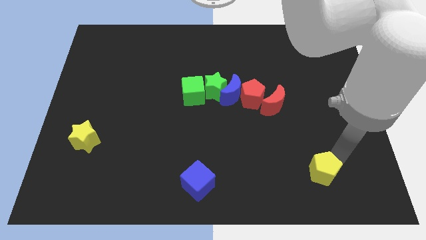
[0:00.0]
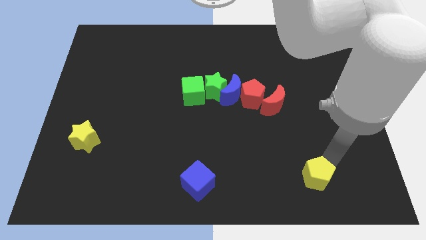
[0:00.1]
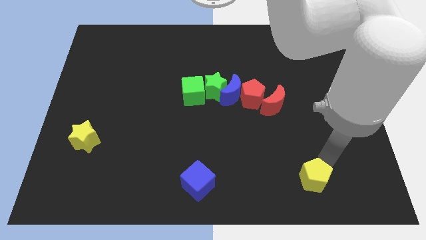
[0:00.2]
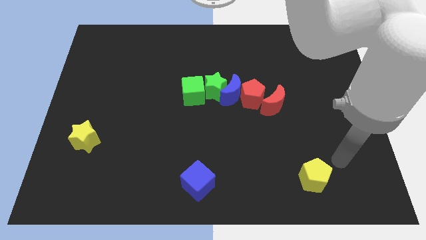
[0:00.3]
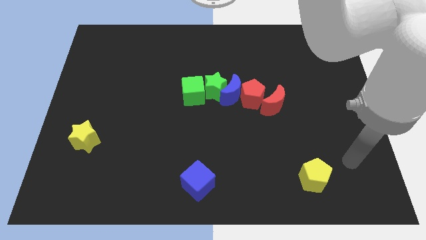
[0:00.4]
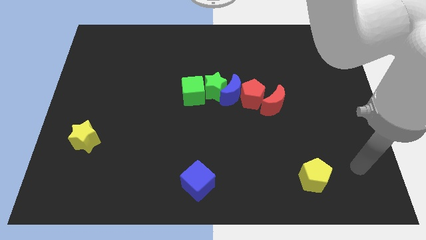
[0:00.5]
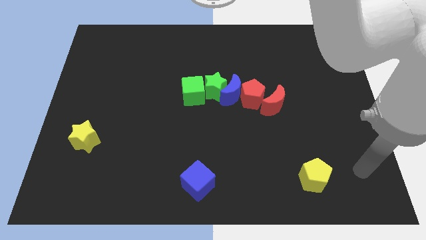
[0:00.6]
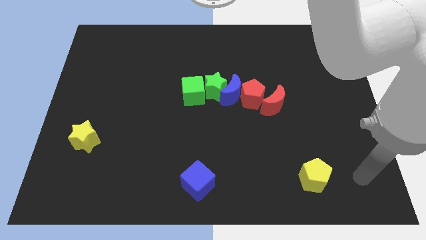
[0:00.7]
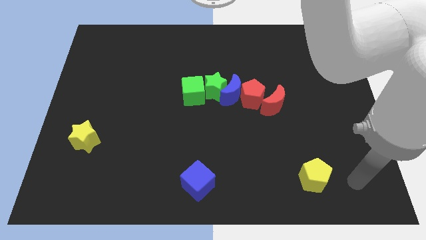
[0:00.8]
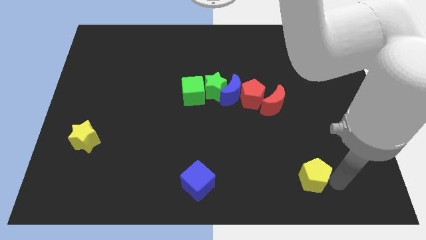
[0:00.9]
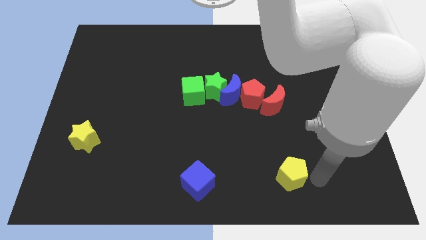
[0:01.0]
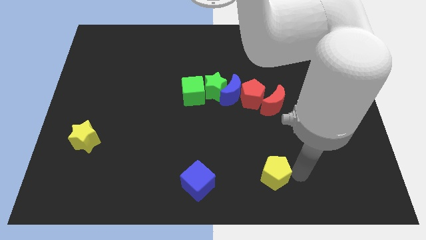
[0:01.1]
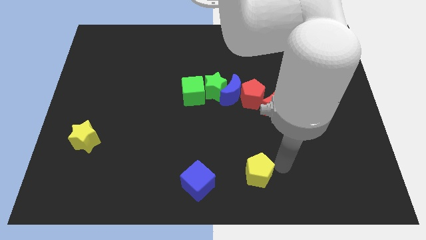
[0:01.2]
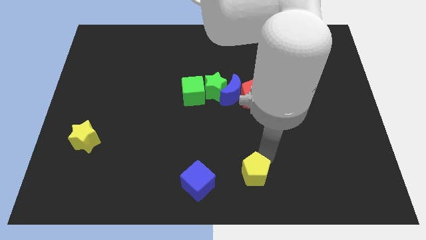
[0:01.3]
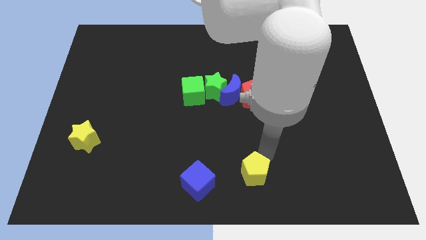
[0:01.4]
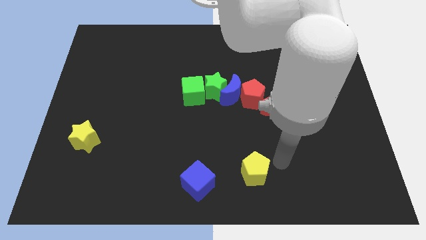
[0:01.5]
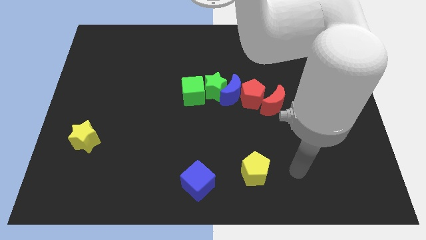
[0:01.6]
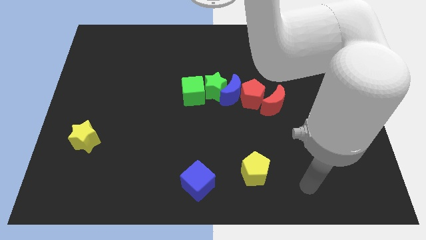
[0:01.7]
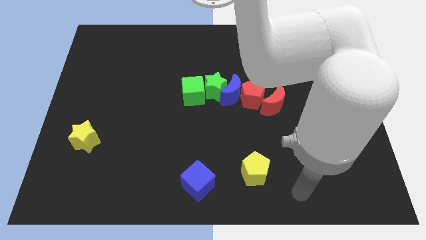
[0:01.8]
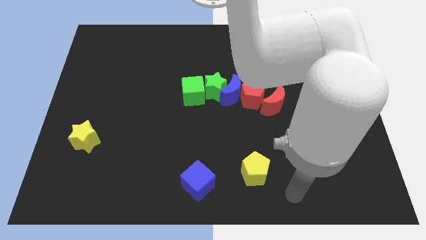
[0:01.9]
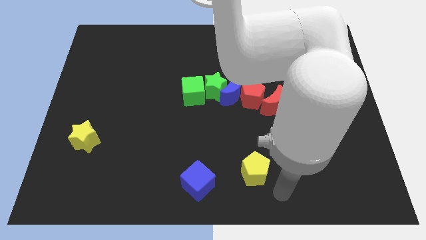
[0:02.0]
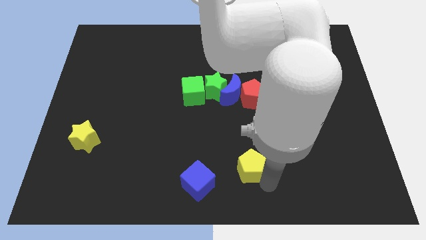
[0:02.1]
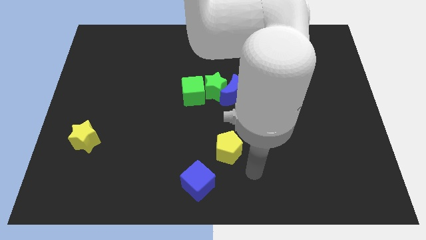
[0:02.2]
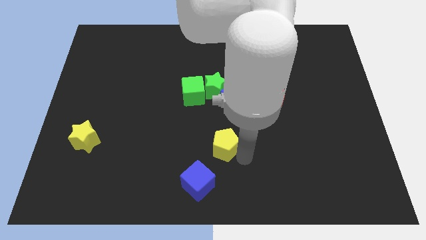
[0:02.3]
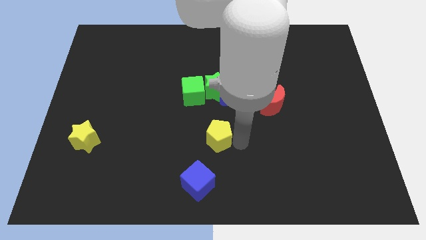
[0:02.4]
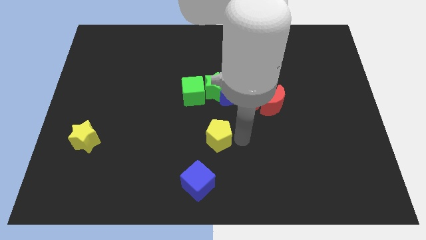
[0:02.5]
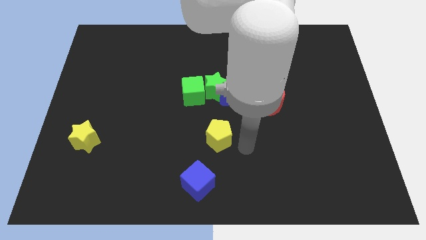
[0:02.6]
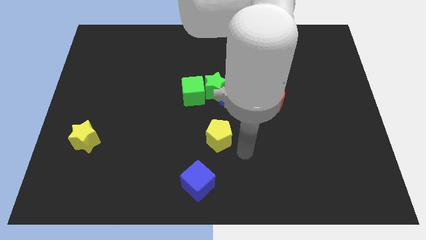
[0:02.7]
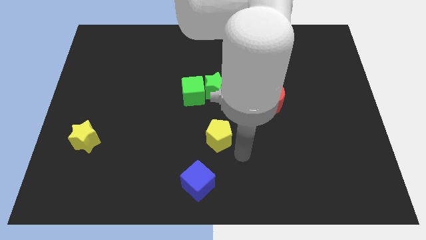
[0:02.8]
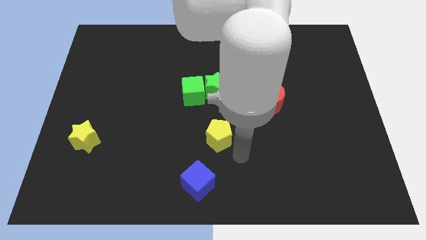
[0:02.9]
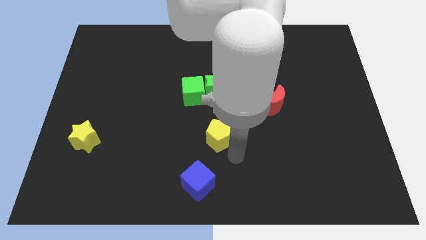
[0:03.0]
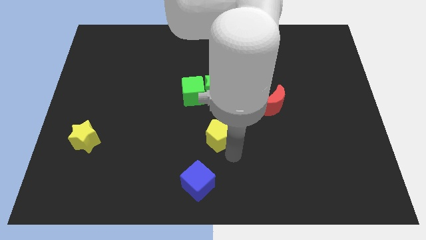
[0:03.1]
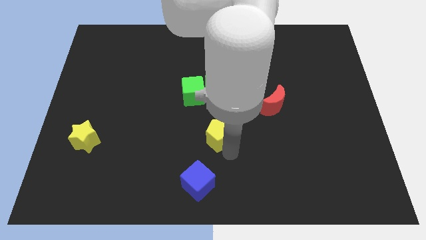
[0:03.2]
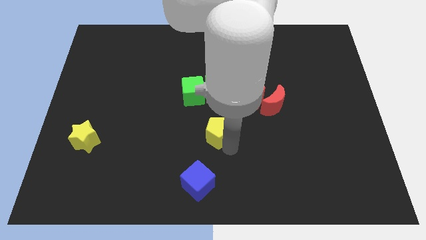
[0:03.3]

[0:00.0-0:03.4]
place the yellow pentagon in between the blue moon and blue cube

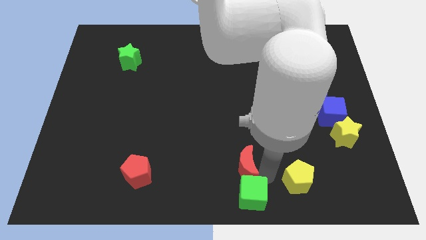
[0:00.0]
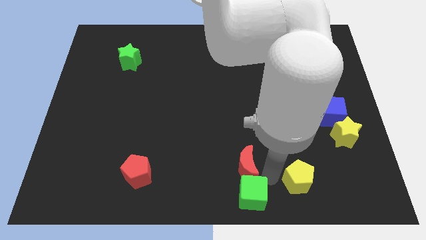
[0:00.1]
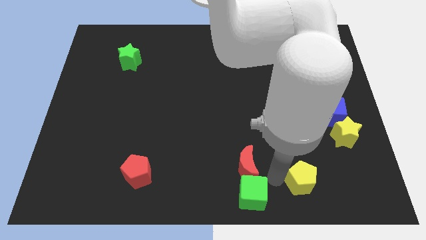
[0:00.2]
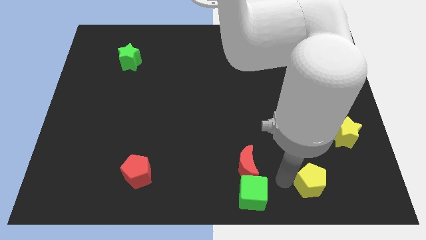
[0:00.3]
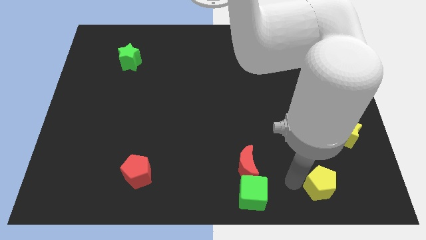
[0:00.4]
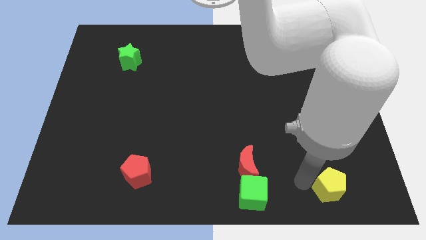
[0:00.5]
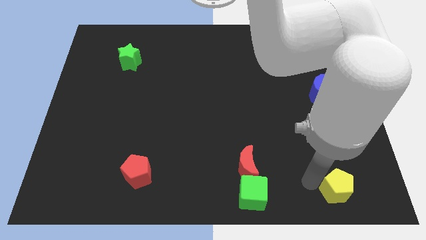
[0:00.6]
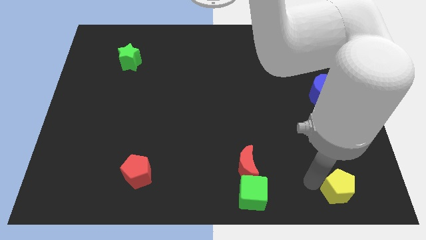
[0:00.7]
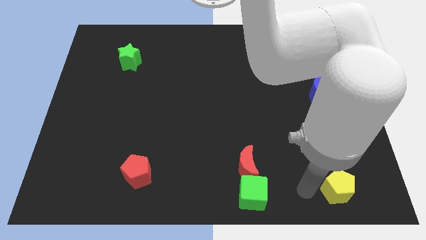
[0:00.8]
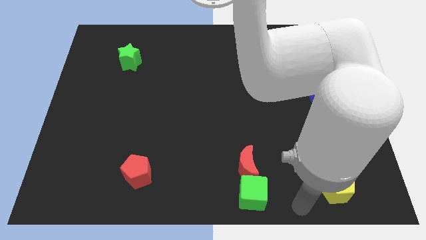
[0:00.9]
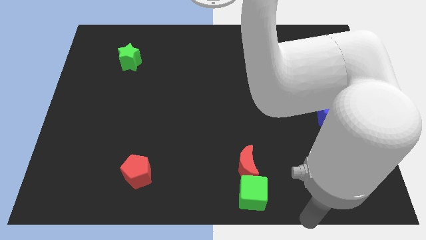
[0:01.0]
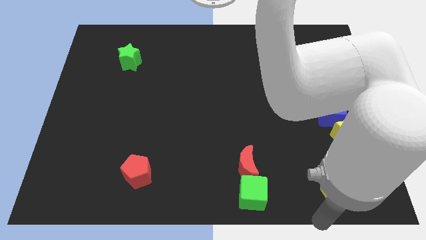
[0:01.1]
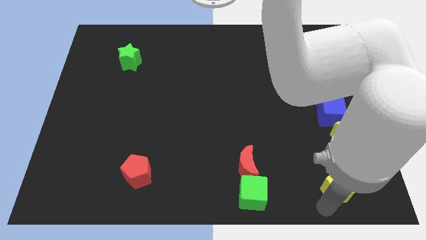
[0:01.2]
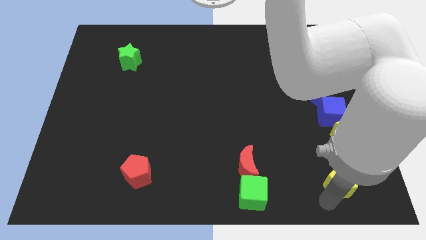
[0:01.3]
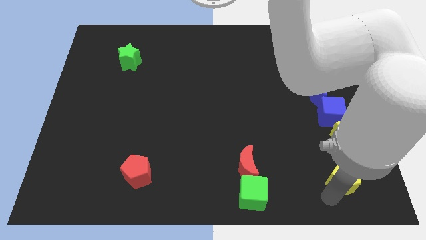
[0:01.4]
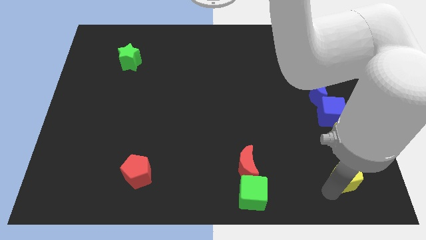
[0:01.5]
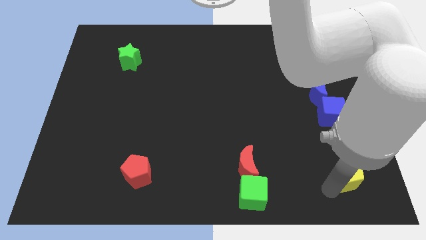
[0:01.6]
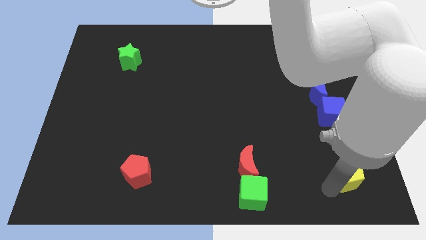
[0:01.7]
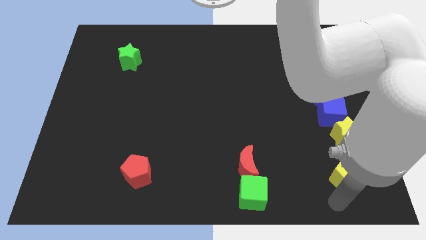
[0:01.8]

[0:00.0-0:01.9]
place the yellow pentagon under the yellow star

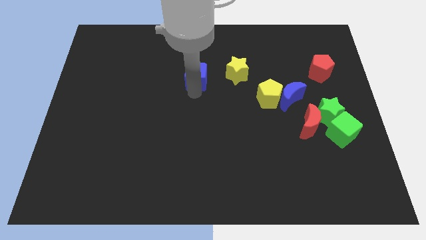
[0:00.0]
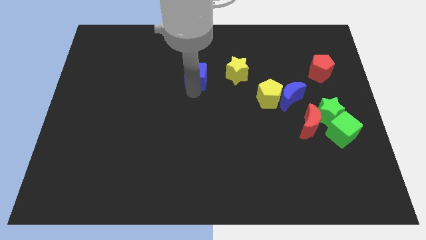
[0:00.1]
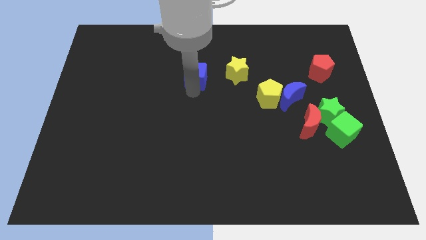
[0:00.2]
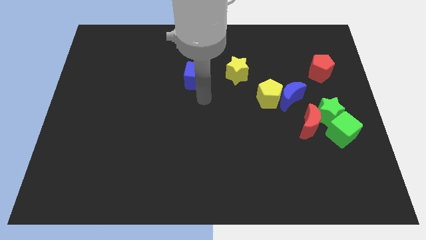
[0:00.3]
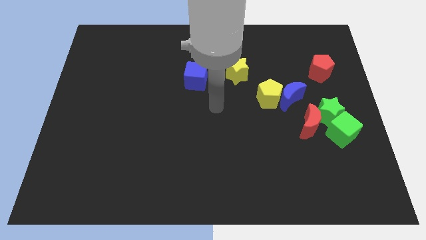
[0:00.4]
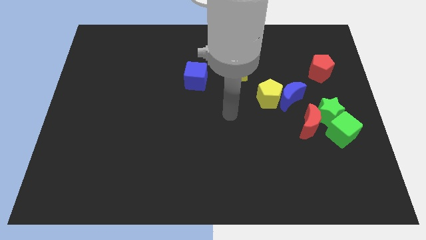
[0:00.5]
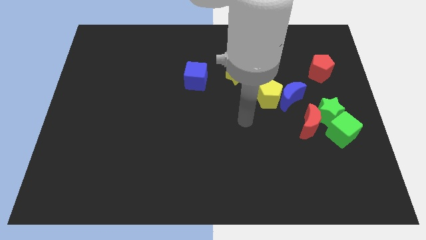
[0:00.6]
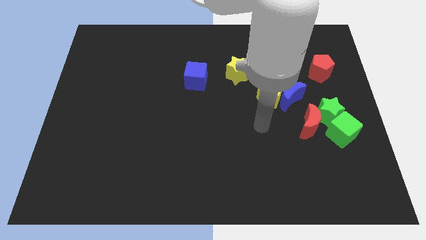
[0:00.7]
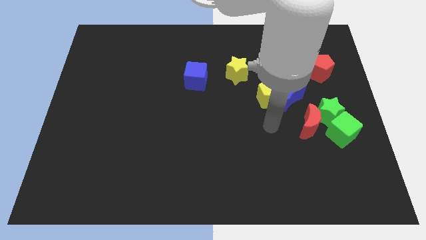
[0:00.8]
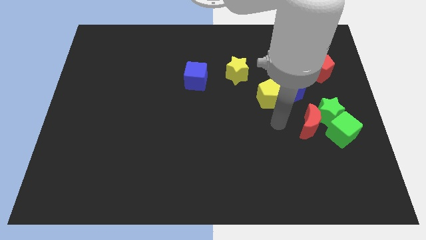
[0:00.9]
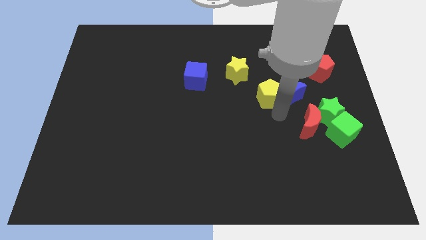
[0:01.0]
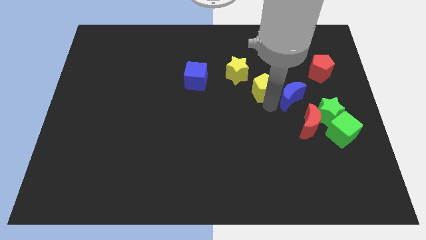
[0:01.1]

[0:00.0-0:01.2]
move your hand towards the yellow pentagon

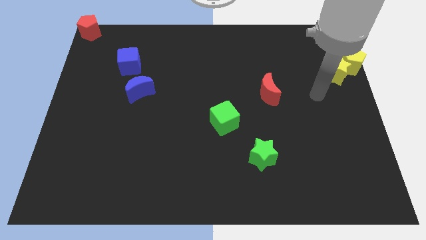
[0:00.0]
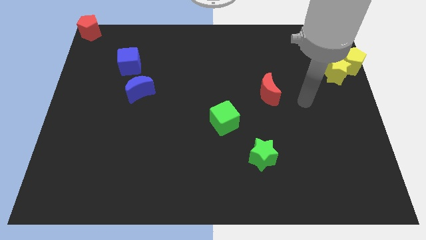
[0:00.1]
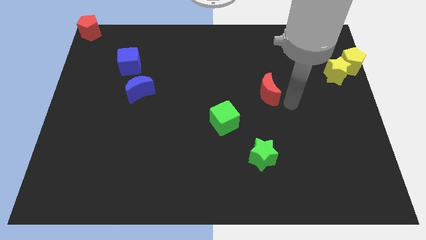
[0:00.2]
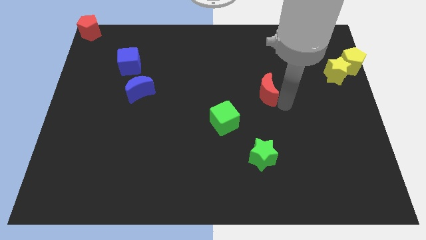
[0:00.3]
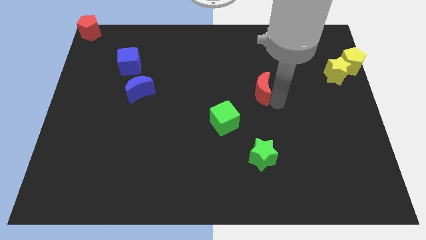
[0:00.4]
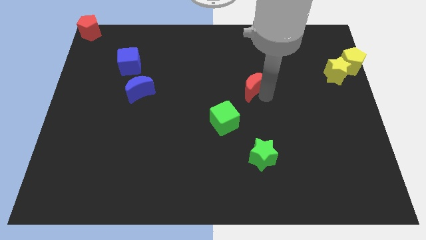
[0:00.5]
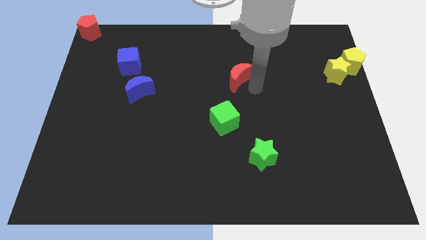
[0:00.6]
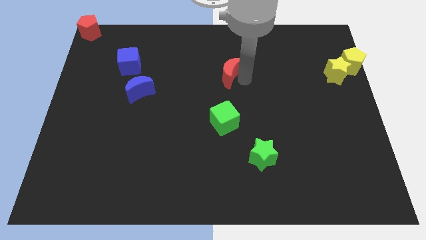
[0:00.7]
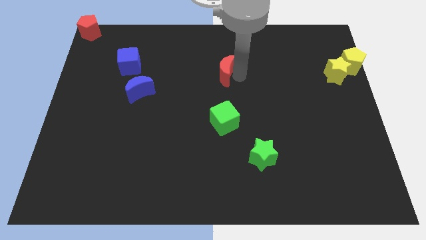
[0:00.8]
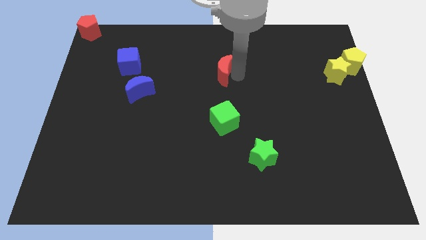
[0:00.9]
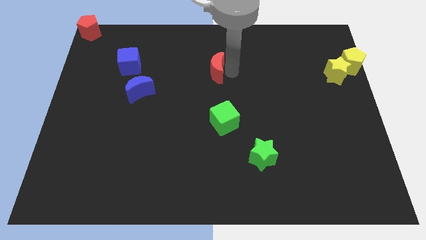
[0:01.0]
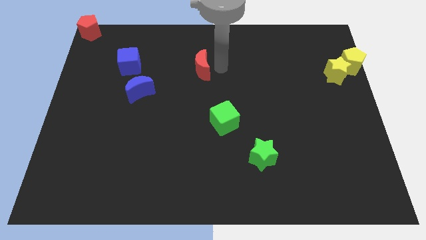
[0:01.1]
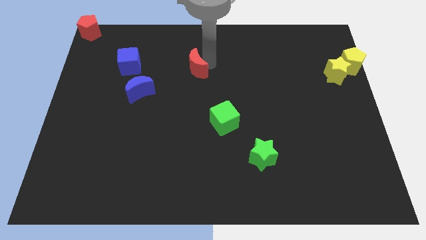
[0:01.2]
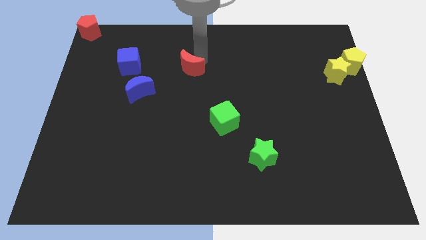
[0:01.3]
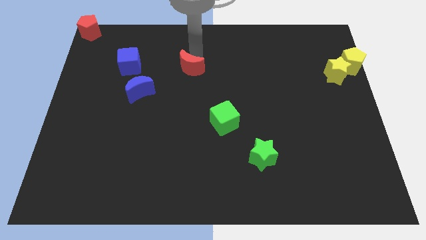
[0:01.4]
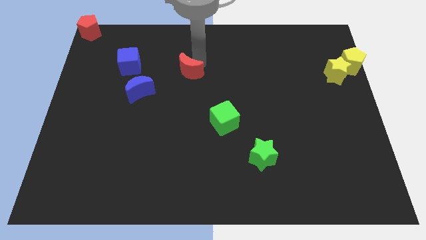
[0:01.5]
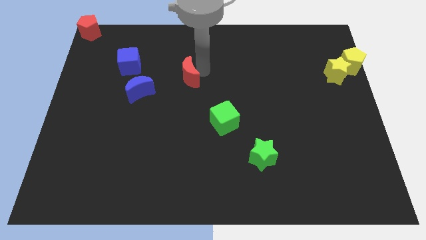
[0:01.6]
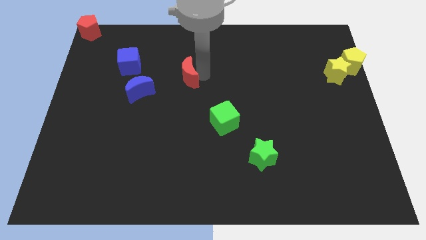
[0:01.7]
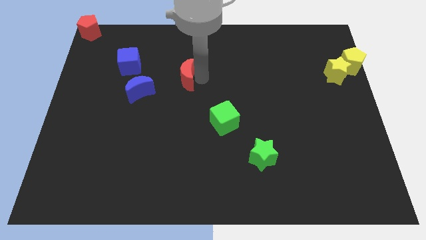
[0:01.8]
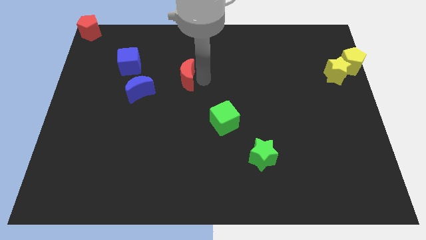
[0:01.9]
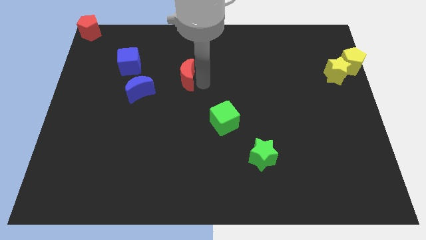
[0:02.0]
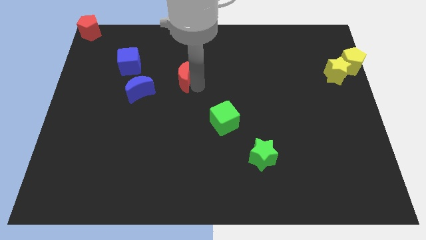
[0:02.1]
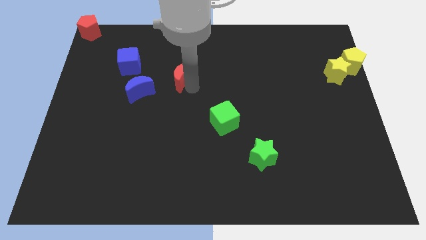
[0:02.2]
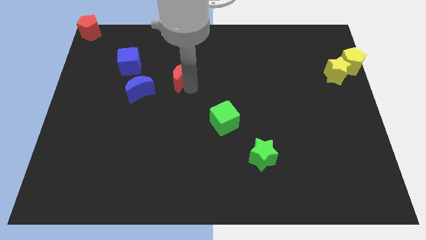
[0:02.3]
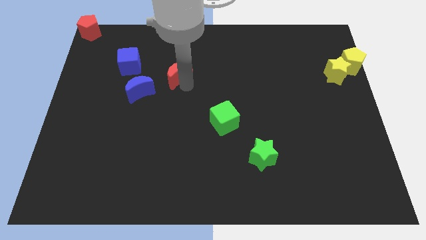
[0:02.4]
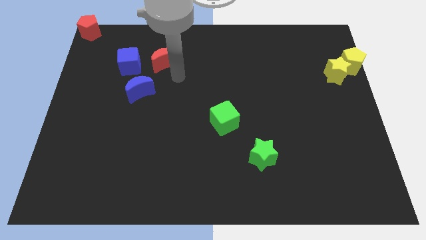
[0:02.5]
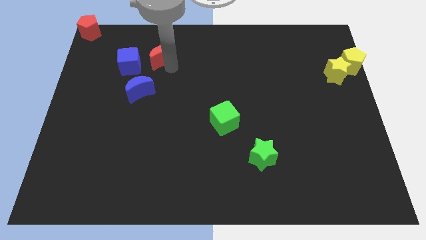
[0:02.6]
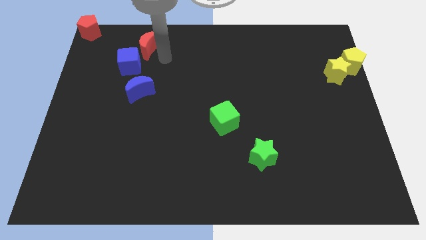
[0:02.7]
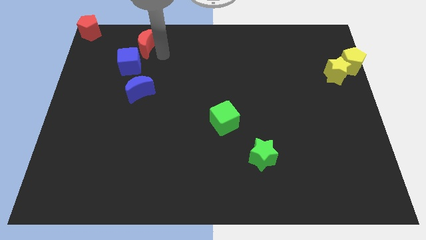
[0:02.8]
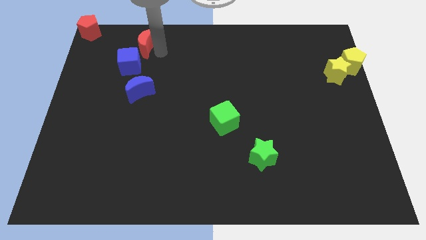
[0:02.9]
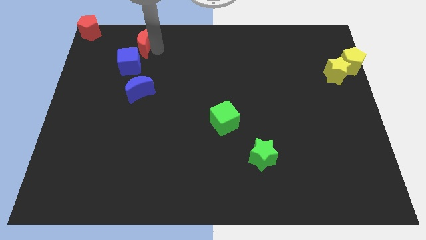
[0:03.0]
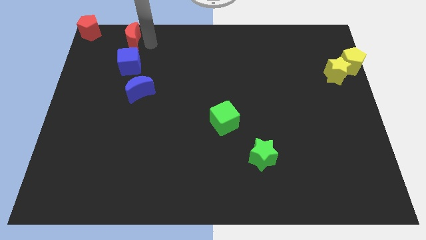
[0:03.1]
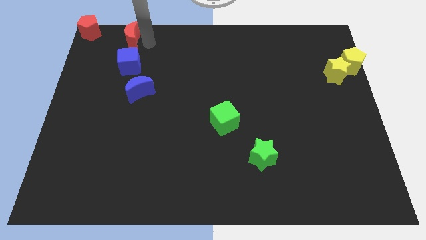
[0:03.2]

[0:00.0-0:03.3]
push the red crescent to the top side of the blue cube
